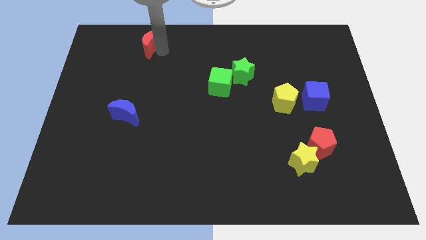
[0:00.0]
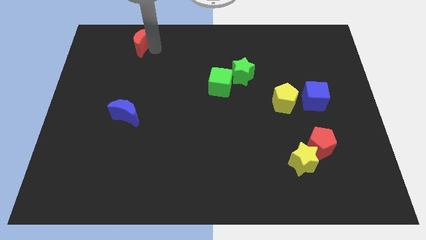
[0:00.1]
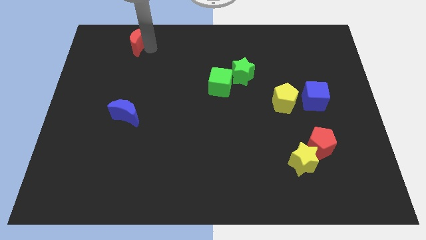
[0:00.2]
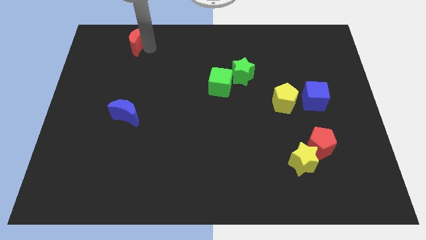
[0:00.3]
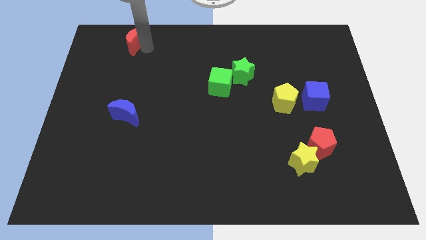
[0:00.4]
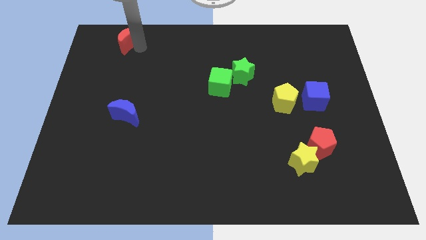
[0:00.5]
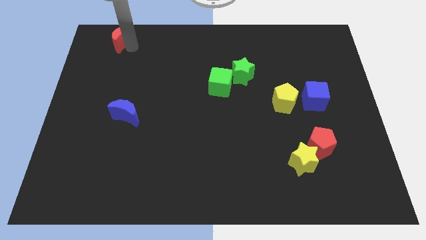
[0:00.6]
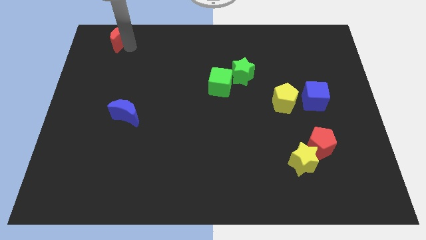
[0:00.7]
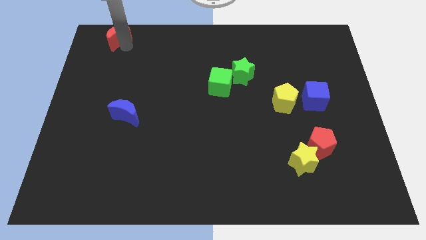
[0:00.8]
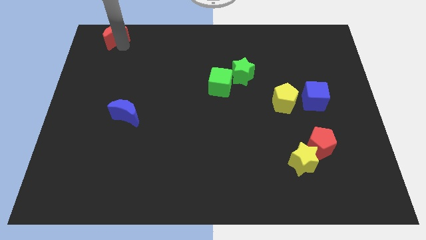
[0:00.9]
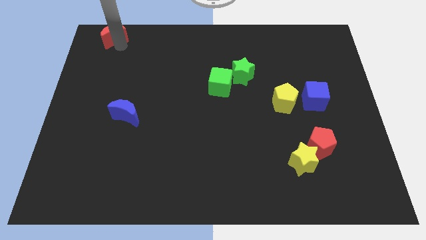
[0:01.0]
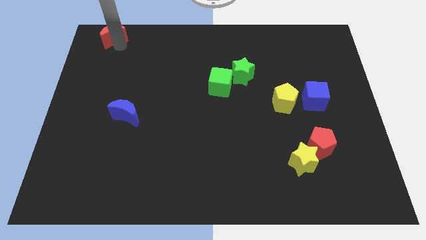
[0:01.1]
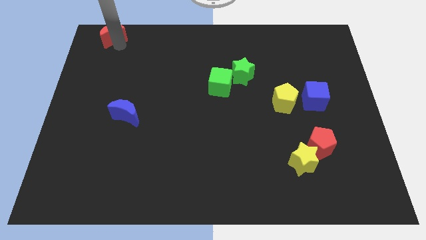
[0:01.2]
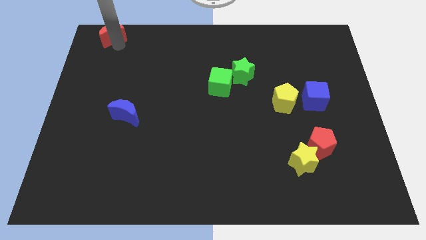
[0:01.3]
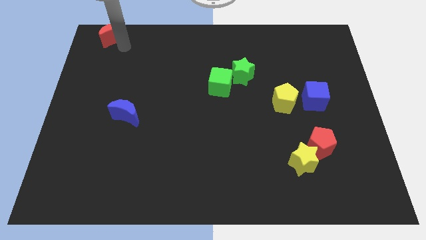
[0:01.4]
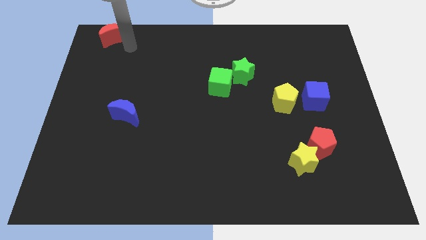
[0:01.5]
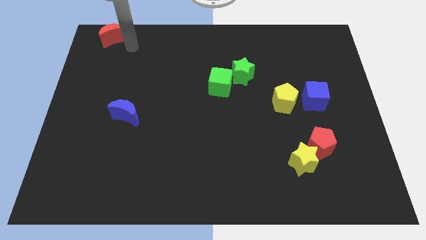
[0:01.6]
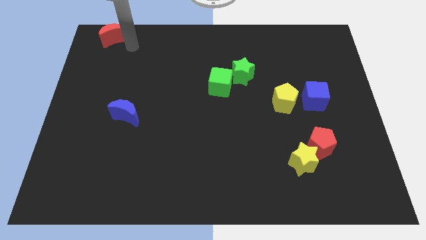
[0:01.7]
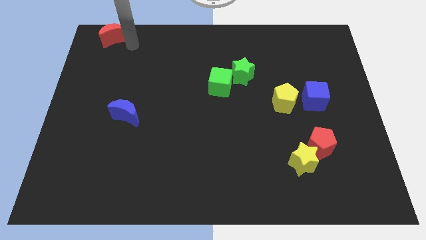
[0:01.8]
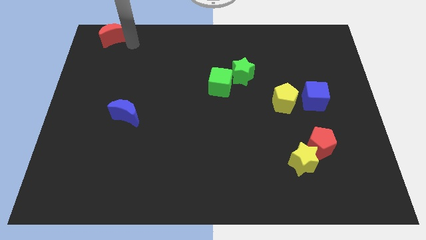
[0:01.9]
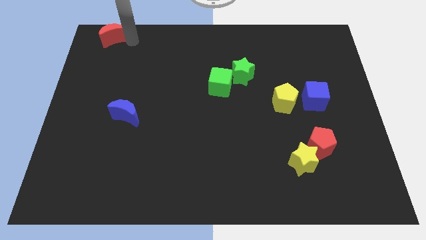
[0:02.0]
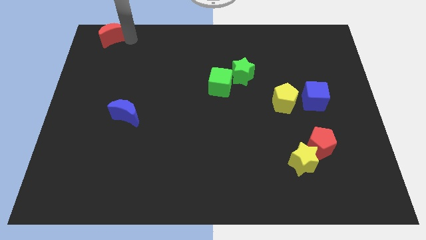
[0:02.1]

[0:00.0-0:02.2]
move the red moon towards the top left side corner

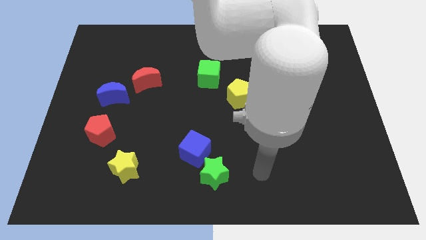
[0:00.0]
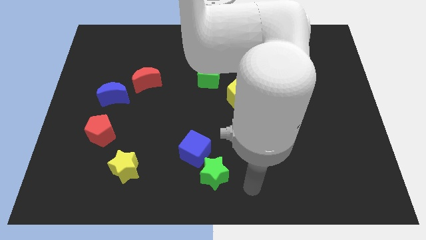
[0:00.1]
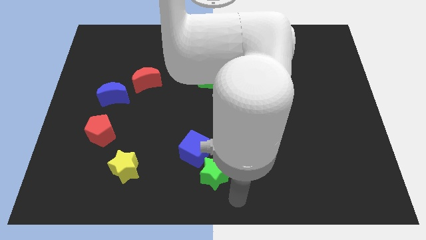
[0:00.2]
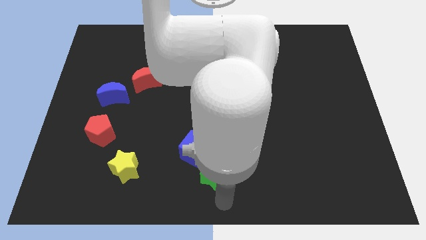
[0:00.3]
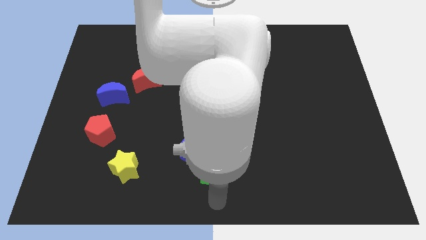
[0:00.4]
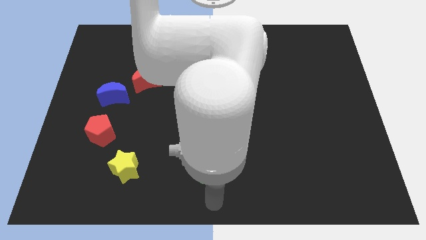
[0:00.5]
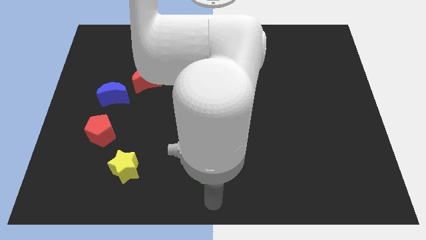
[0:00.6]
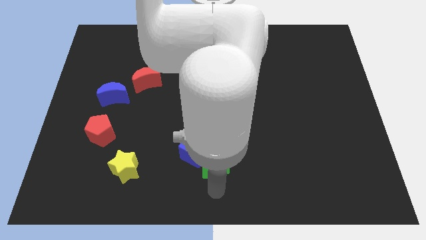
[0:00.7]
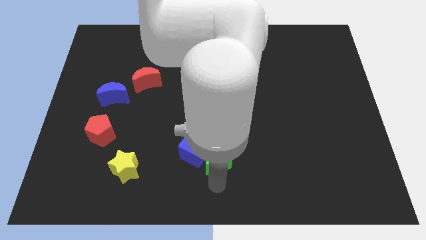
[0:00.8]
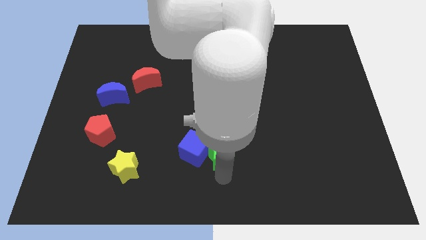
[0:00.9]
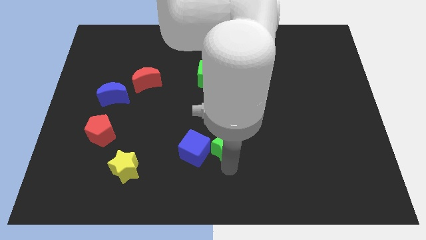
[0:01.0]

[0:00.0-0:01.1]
move the green star slightly up to the right of the blue cube

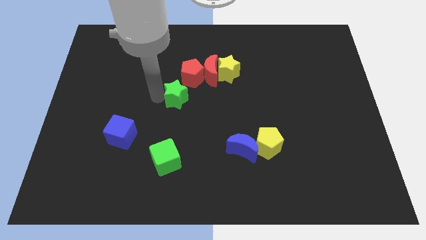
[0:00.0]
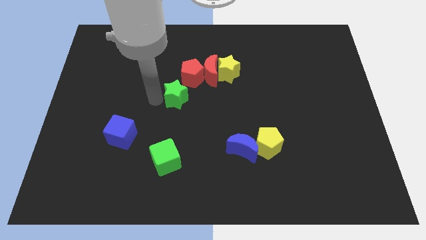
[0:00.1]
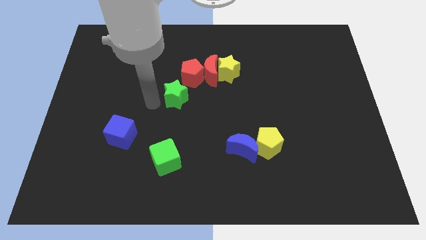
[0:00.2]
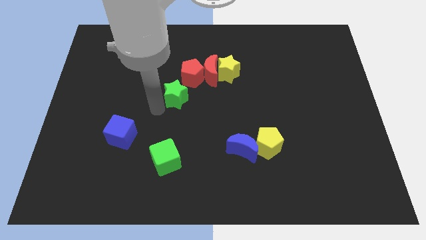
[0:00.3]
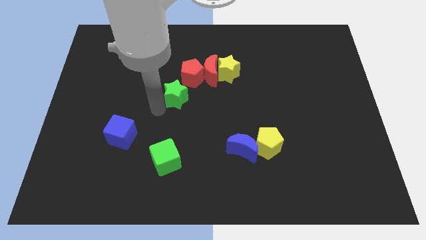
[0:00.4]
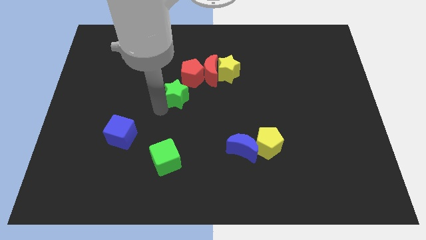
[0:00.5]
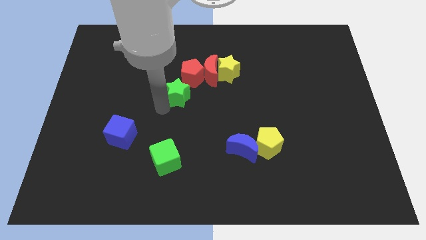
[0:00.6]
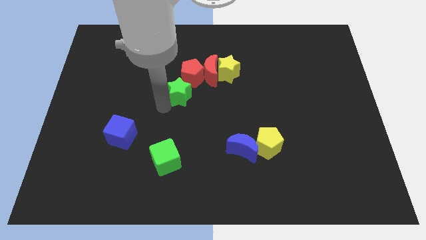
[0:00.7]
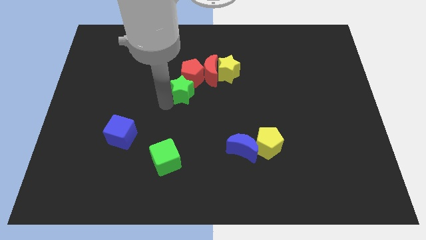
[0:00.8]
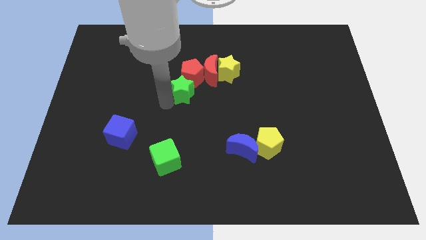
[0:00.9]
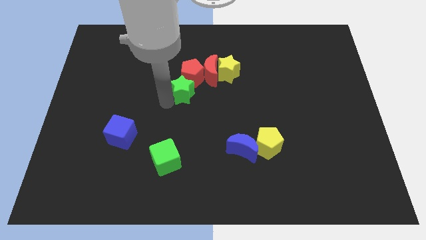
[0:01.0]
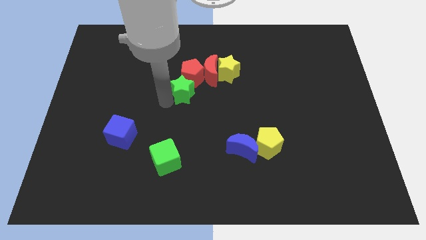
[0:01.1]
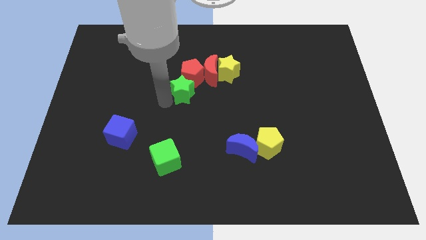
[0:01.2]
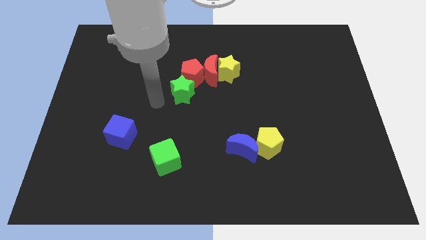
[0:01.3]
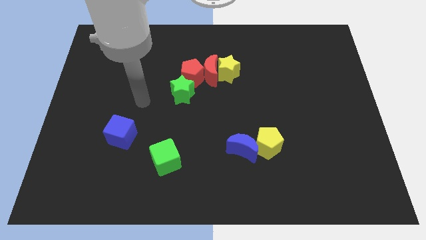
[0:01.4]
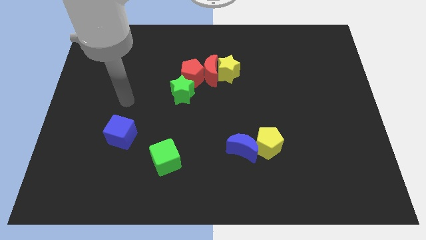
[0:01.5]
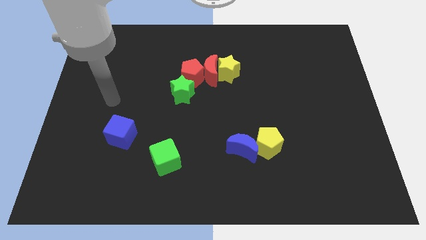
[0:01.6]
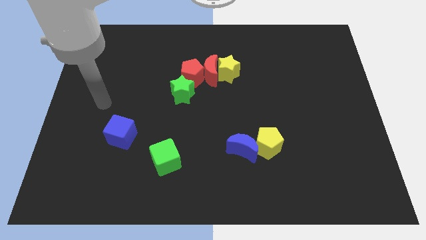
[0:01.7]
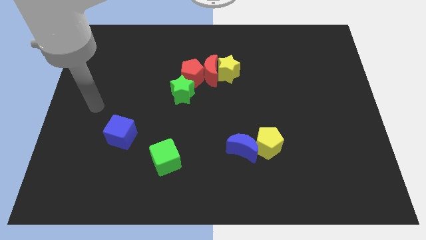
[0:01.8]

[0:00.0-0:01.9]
move the green star to the bottom left side of the red pentagon

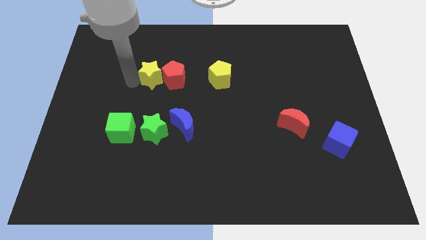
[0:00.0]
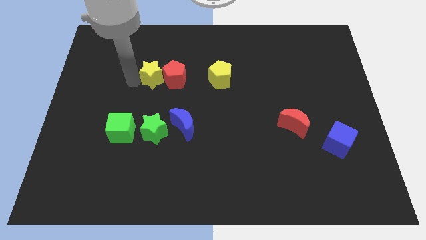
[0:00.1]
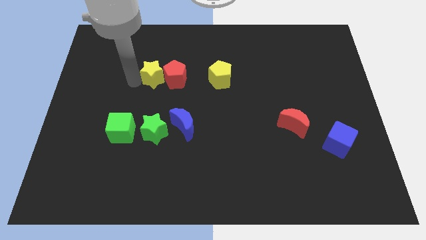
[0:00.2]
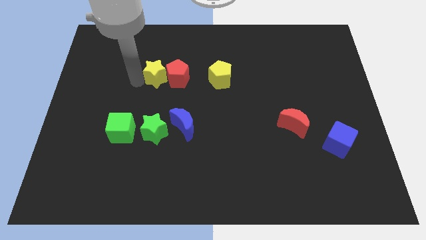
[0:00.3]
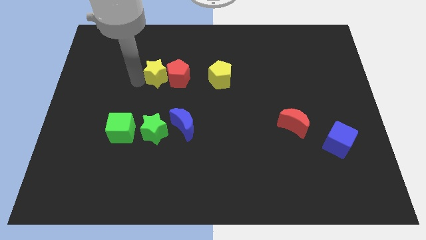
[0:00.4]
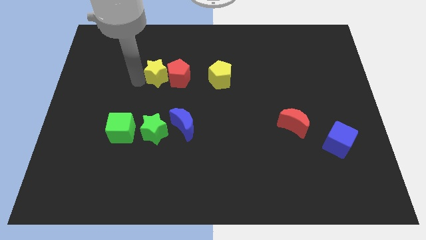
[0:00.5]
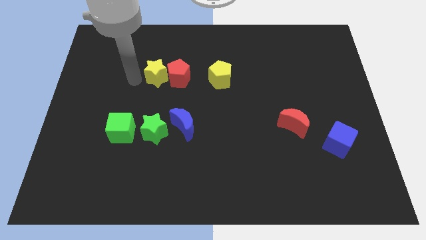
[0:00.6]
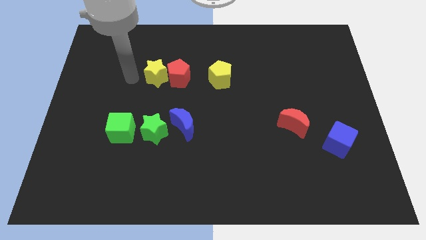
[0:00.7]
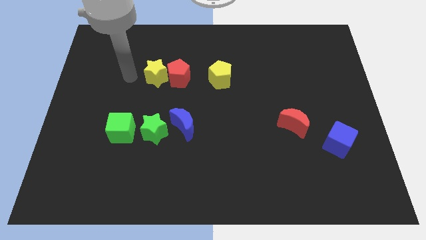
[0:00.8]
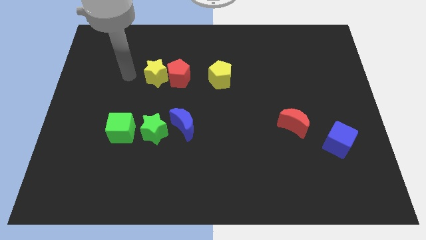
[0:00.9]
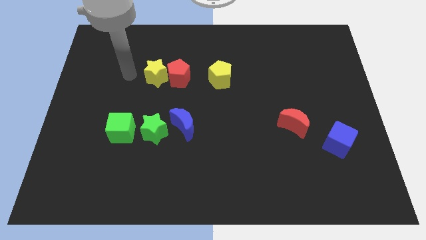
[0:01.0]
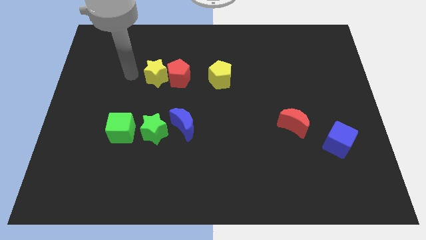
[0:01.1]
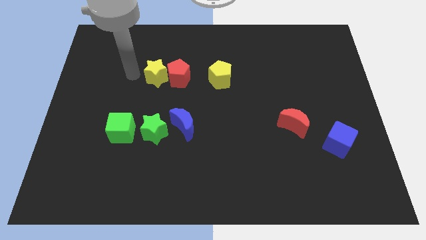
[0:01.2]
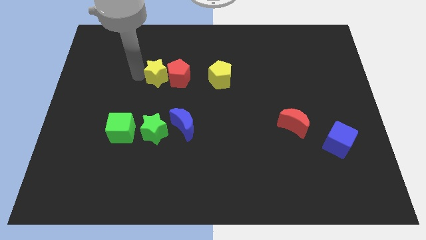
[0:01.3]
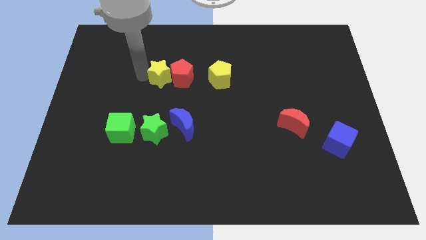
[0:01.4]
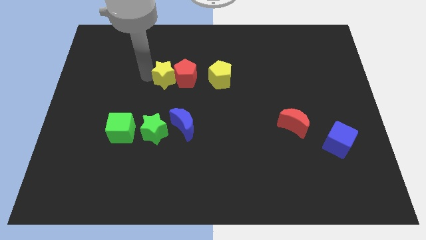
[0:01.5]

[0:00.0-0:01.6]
move the yellow star along with the red pentagon slightly to the right

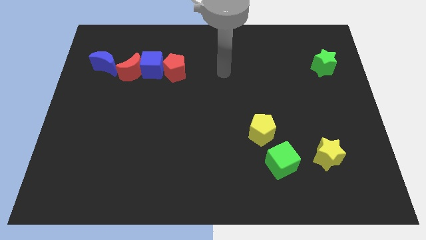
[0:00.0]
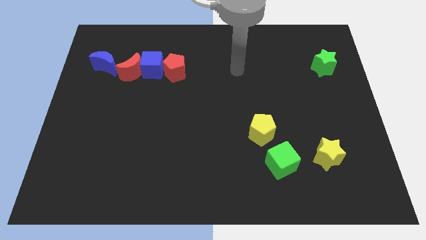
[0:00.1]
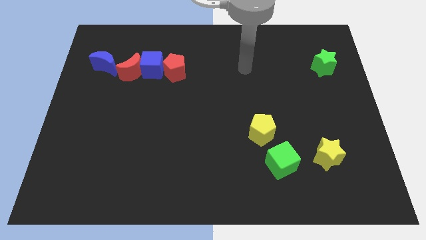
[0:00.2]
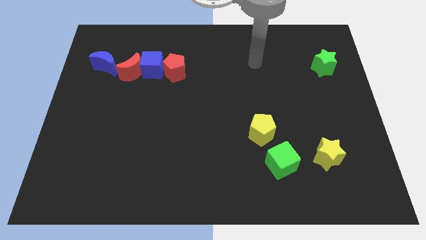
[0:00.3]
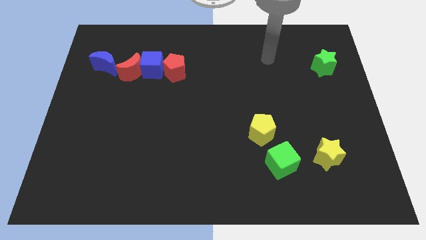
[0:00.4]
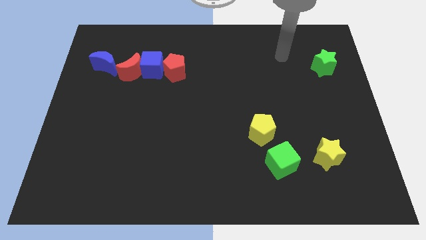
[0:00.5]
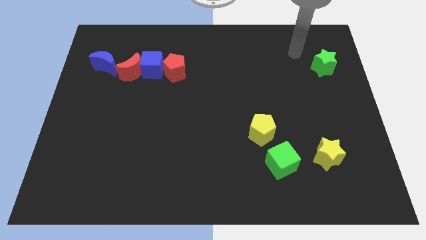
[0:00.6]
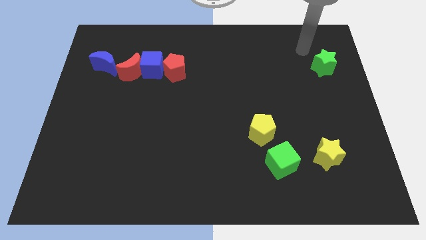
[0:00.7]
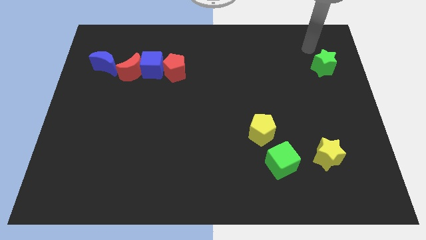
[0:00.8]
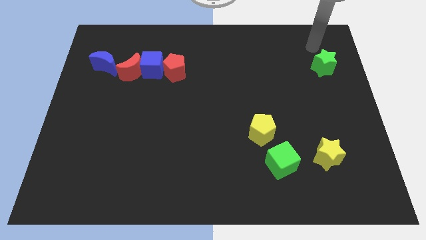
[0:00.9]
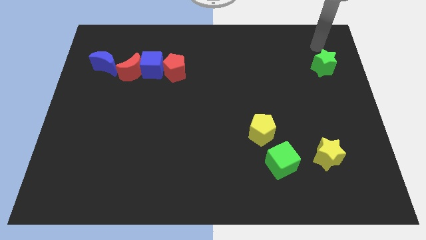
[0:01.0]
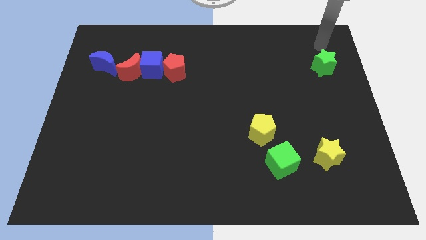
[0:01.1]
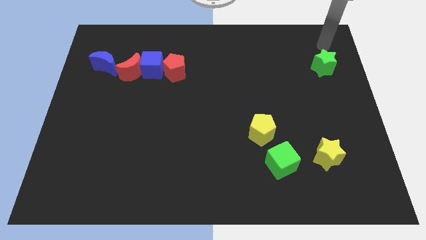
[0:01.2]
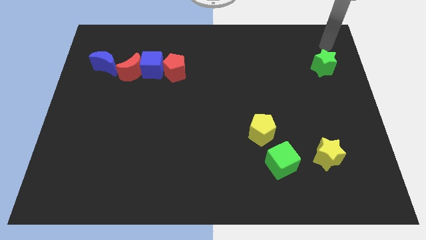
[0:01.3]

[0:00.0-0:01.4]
move your arm to the top of the green star

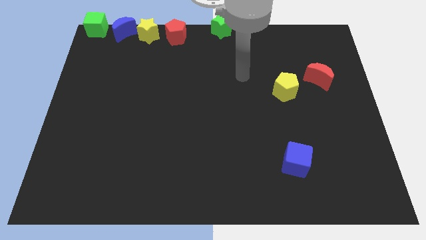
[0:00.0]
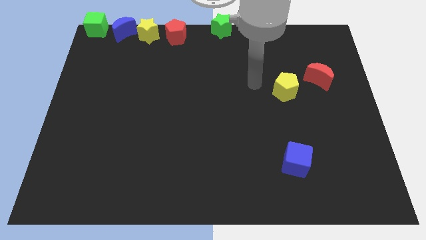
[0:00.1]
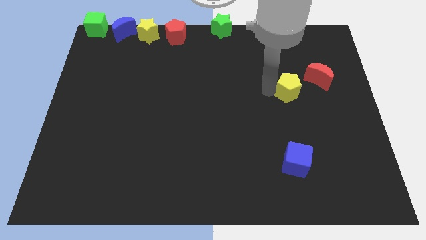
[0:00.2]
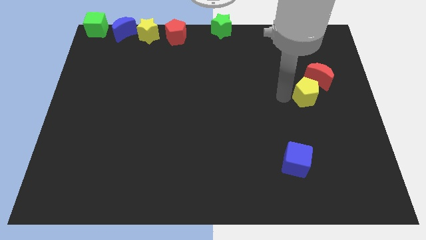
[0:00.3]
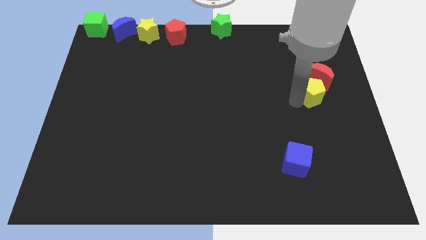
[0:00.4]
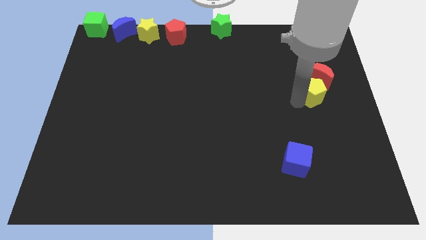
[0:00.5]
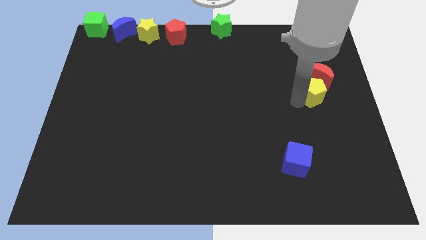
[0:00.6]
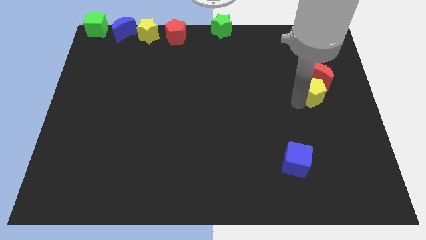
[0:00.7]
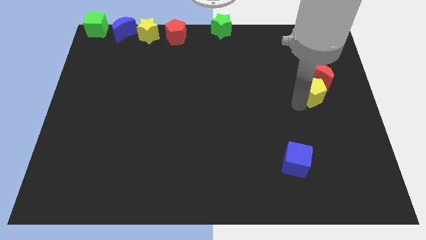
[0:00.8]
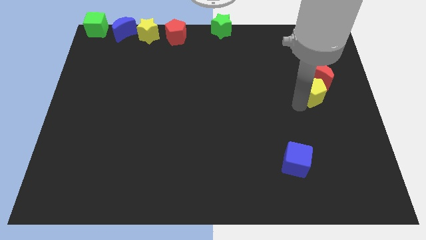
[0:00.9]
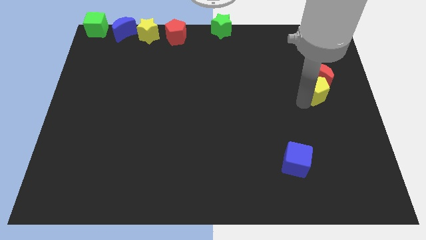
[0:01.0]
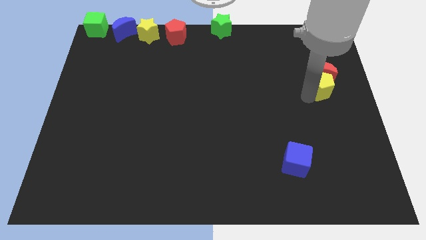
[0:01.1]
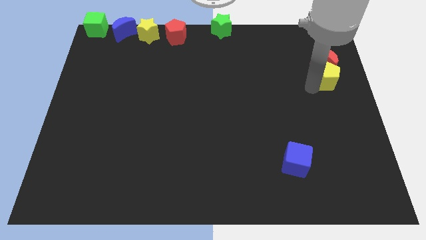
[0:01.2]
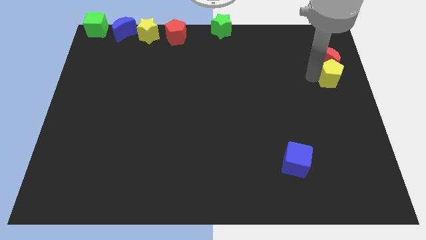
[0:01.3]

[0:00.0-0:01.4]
slide the yellow pentagon into the red moon
